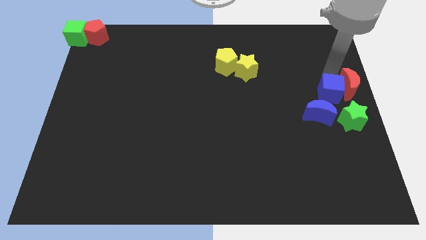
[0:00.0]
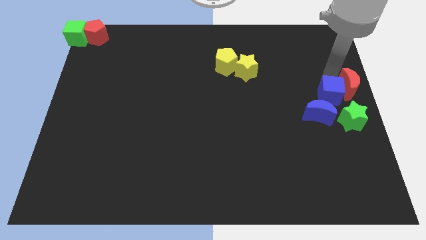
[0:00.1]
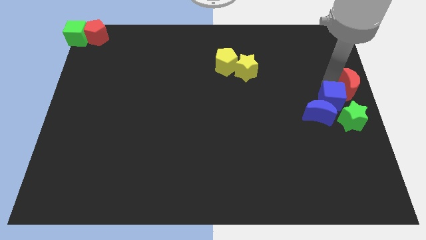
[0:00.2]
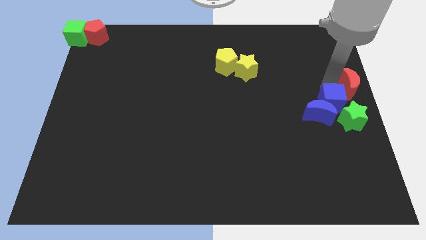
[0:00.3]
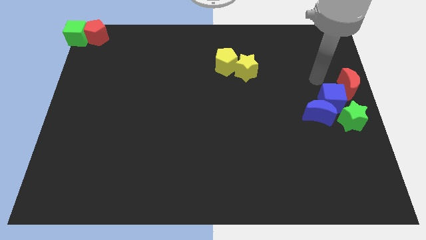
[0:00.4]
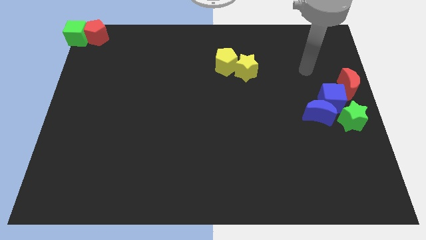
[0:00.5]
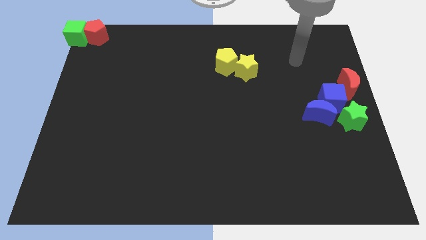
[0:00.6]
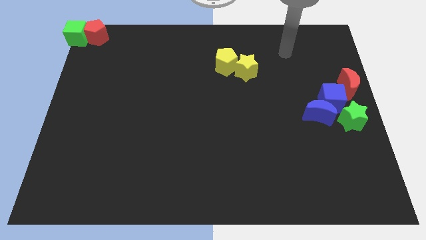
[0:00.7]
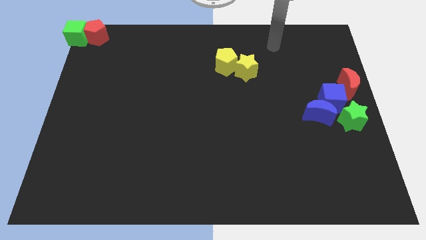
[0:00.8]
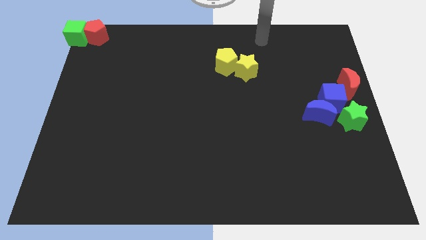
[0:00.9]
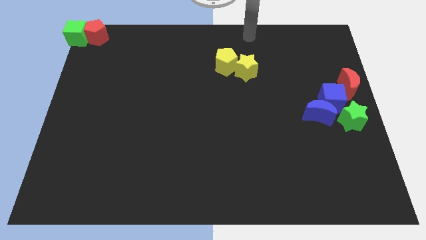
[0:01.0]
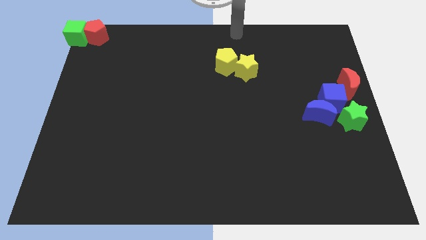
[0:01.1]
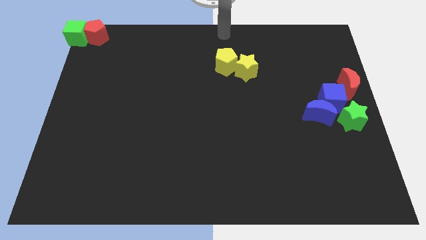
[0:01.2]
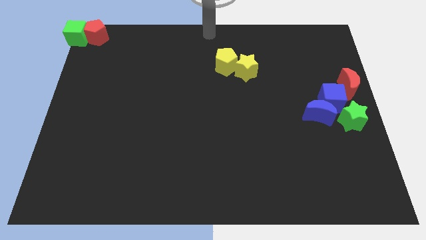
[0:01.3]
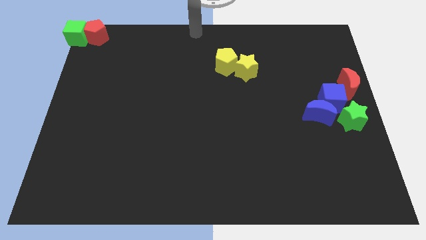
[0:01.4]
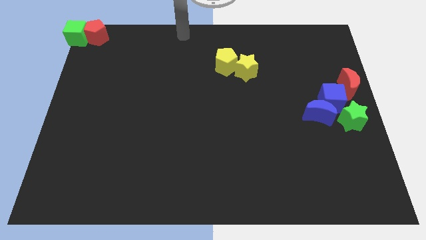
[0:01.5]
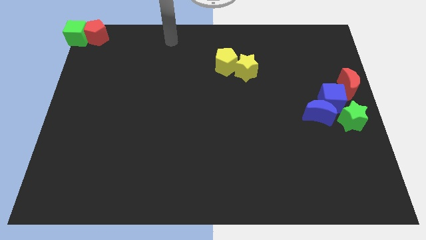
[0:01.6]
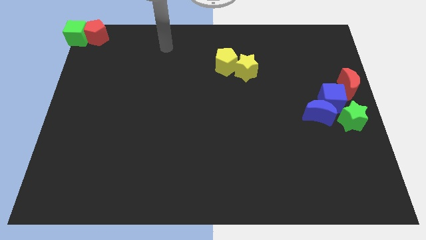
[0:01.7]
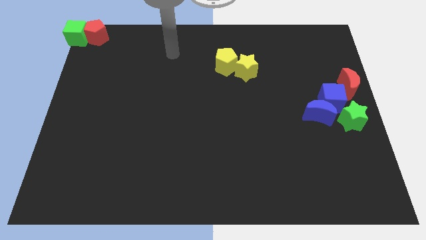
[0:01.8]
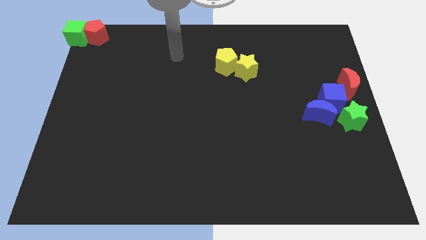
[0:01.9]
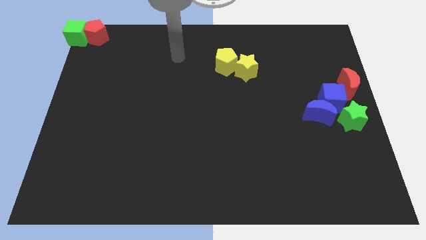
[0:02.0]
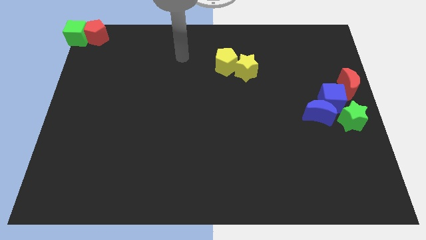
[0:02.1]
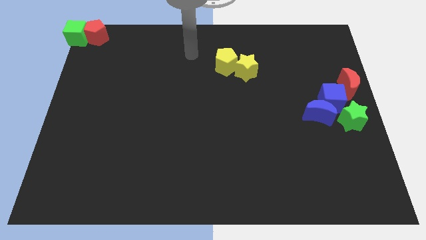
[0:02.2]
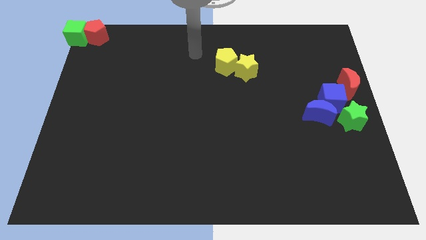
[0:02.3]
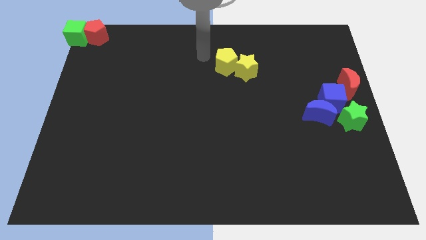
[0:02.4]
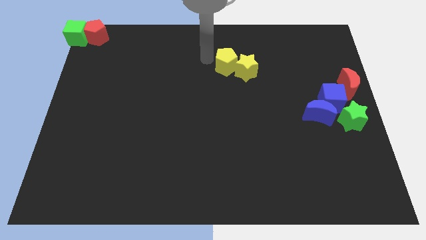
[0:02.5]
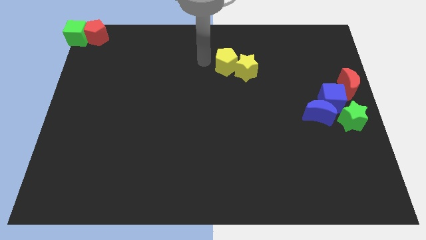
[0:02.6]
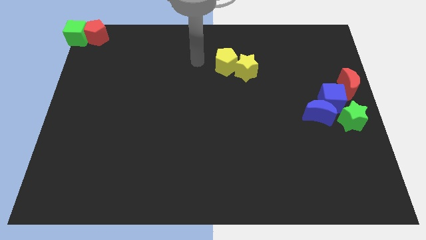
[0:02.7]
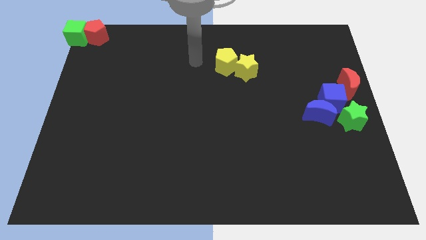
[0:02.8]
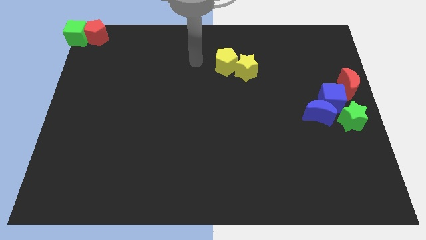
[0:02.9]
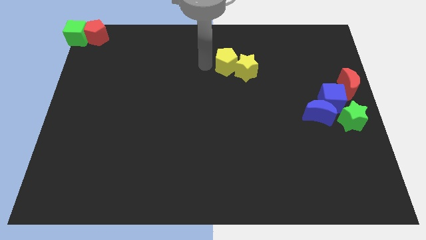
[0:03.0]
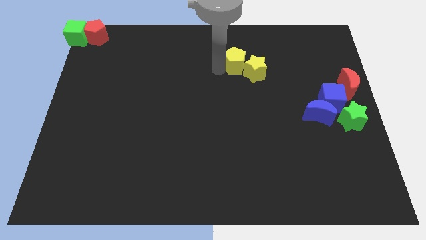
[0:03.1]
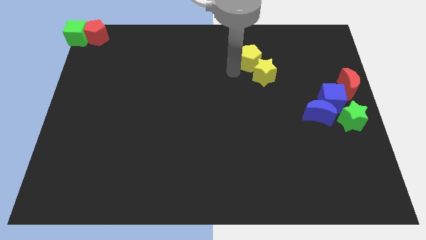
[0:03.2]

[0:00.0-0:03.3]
push the yellow star with the yellow pentagon towards the right center of the board

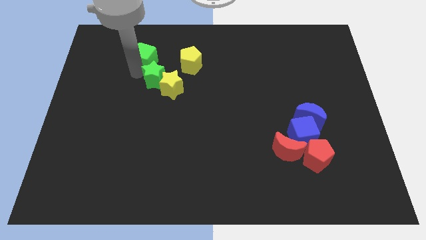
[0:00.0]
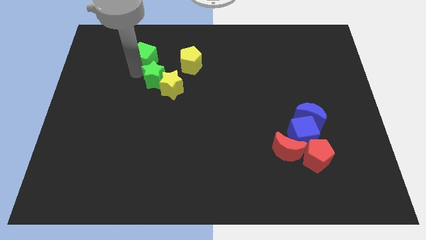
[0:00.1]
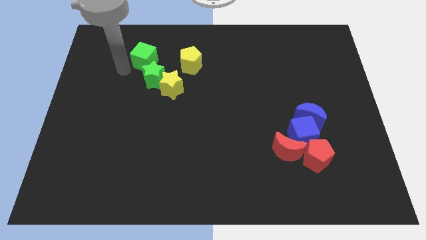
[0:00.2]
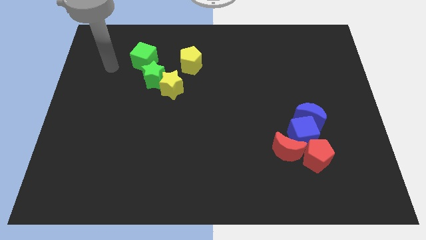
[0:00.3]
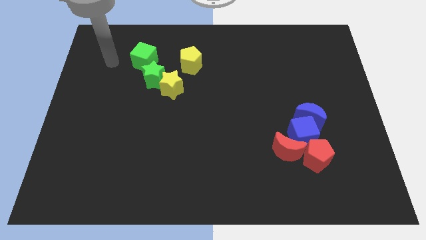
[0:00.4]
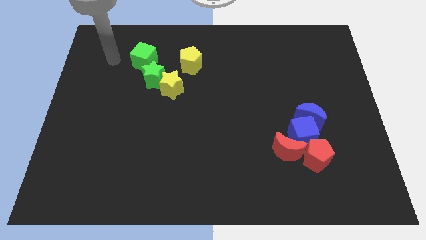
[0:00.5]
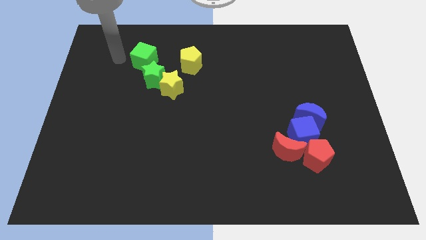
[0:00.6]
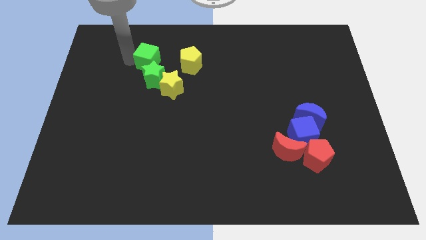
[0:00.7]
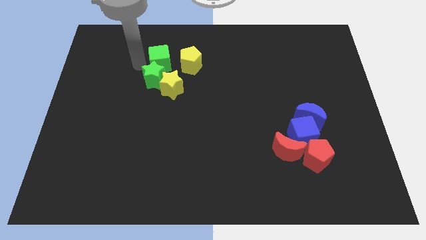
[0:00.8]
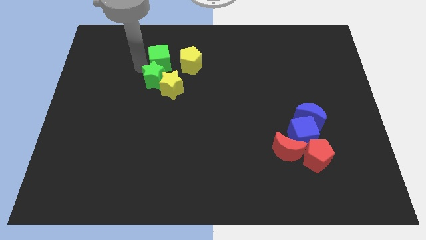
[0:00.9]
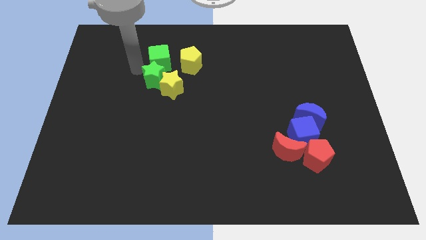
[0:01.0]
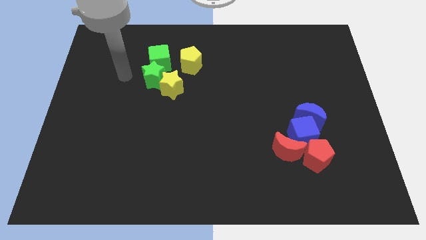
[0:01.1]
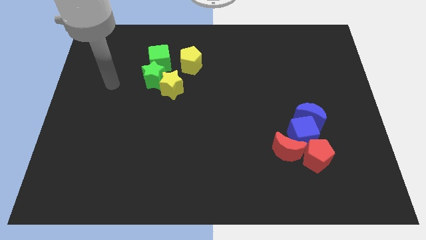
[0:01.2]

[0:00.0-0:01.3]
move the green cube to the top side of the green star

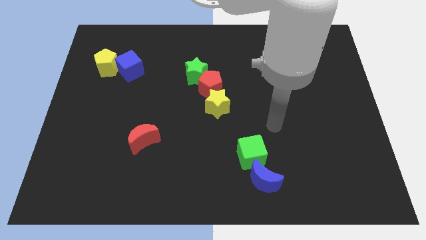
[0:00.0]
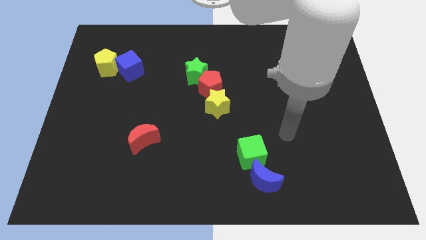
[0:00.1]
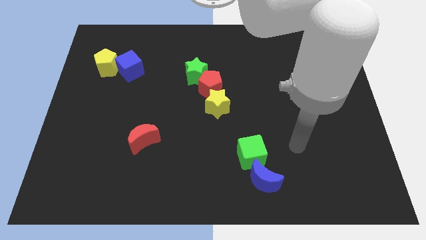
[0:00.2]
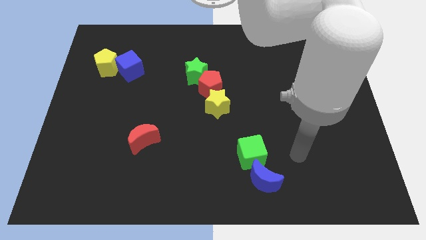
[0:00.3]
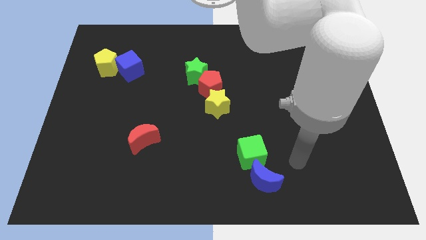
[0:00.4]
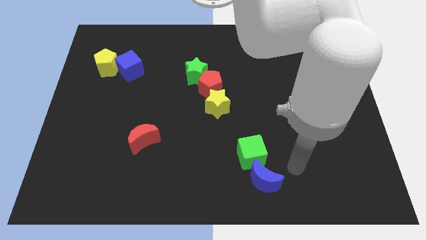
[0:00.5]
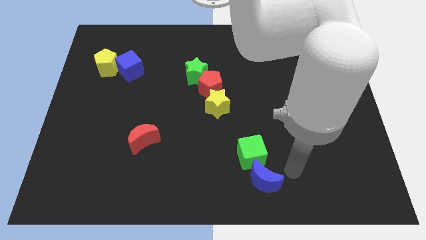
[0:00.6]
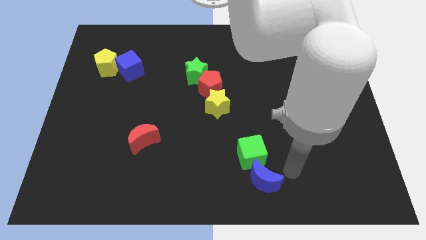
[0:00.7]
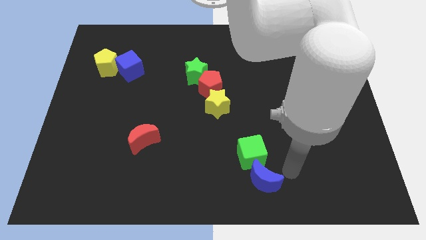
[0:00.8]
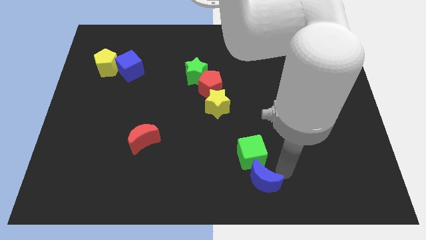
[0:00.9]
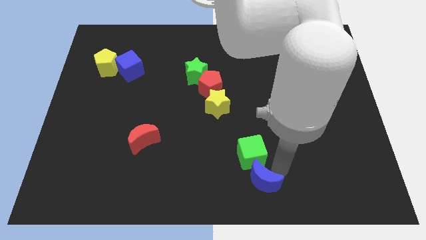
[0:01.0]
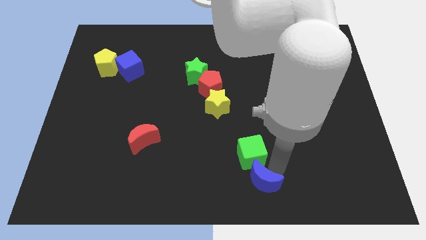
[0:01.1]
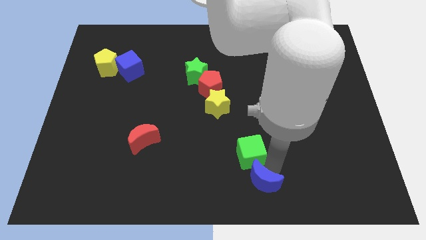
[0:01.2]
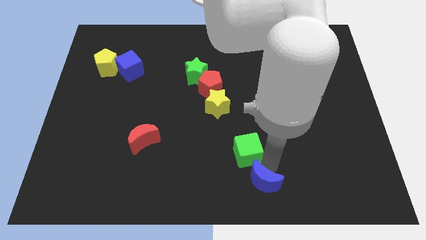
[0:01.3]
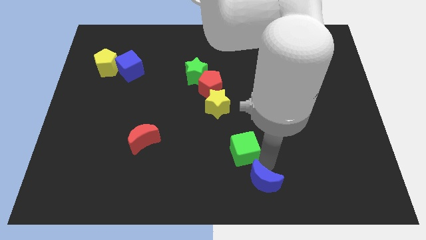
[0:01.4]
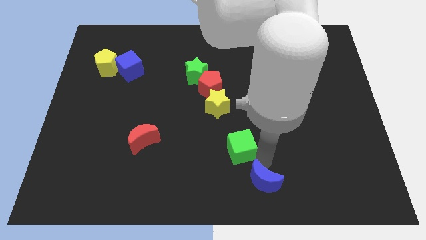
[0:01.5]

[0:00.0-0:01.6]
slightly push the green cube away from the blue crescent

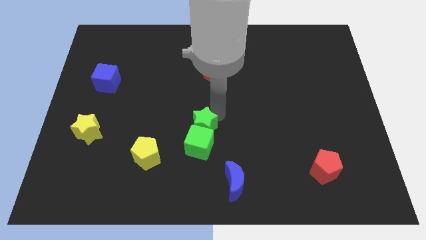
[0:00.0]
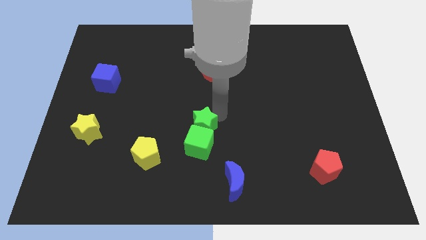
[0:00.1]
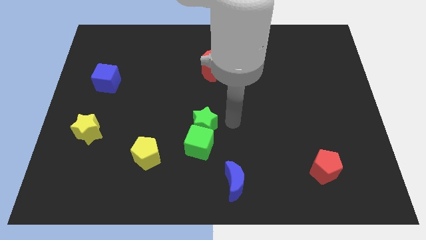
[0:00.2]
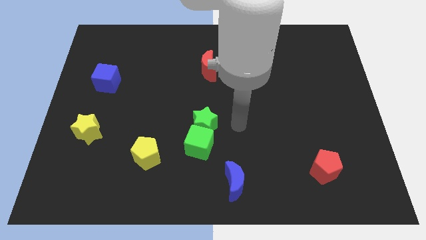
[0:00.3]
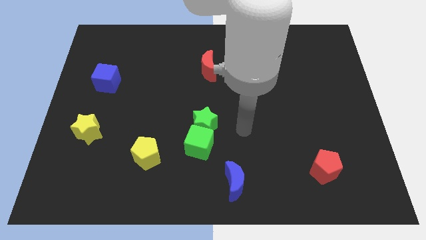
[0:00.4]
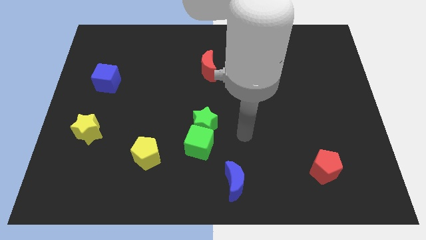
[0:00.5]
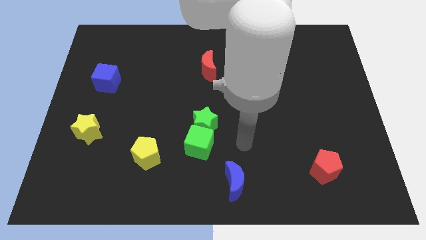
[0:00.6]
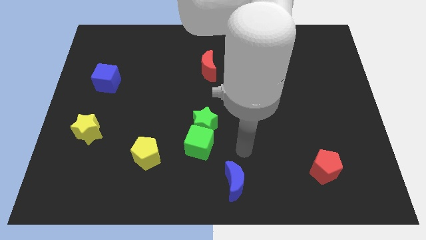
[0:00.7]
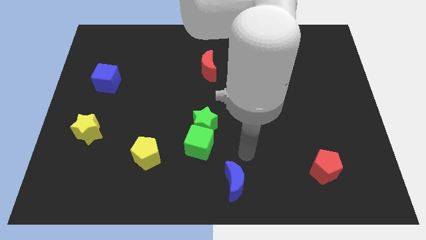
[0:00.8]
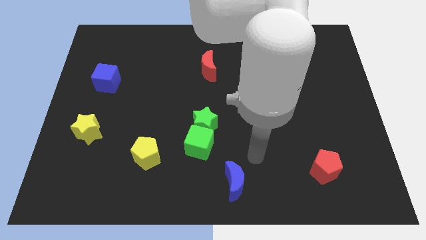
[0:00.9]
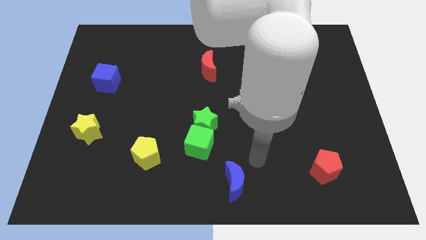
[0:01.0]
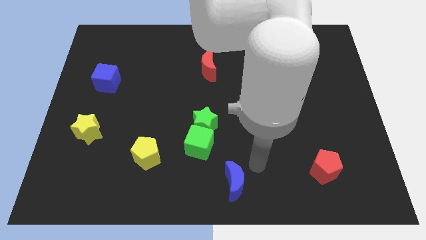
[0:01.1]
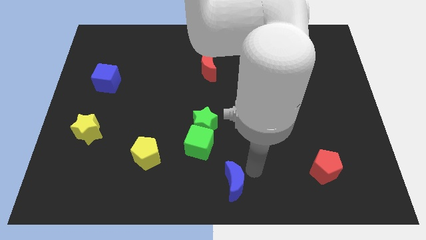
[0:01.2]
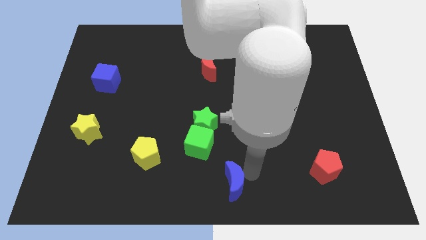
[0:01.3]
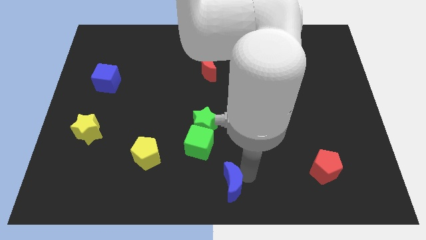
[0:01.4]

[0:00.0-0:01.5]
place your arm to the right of blue moon

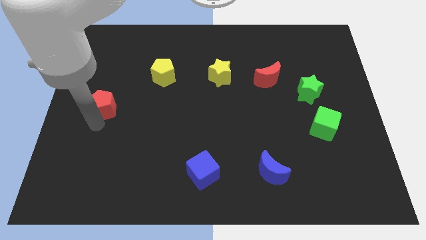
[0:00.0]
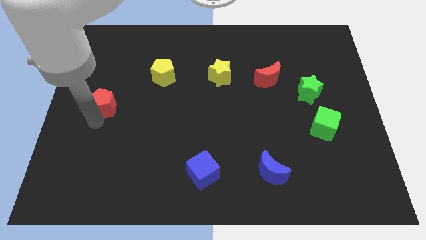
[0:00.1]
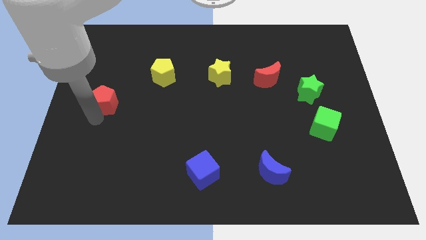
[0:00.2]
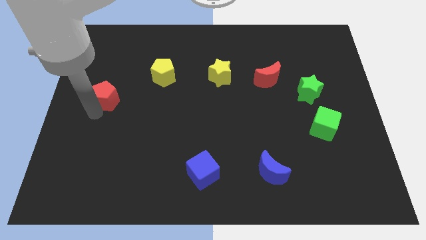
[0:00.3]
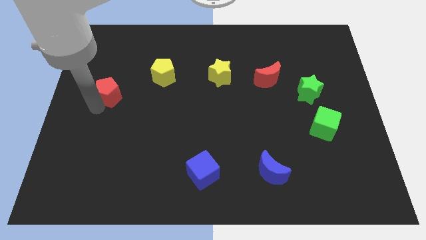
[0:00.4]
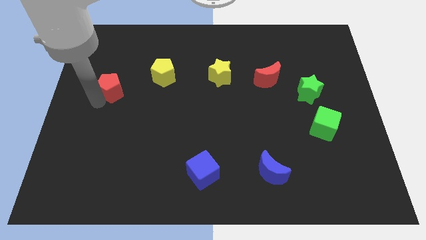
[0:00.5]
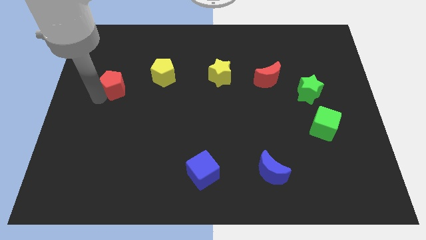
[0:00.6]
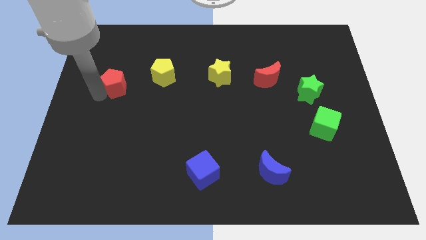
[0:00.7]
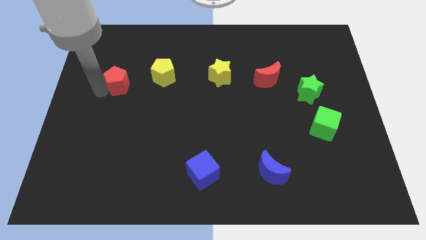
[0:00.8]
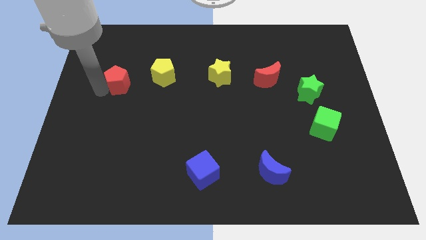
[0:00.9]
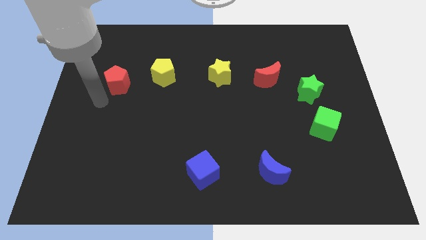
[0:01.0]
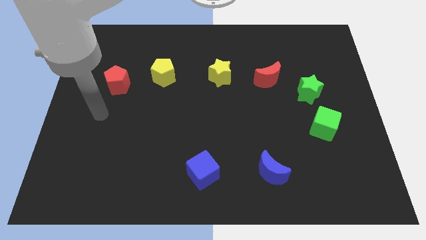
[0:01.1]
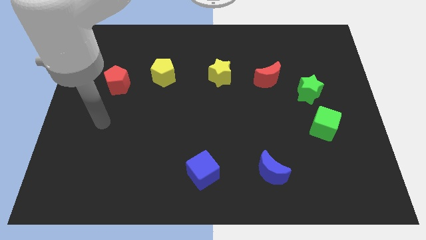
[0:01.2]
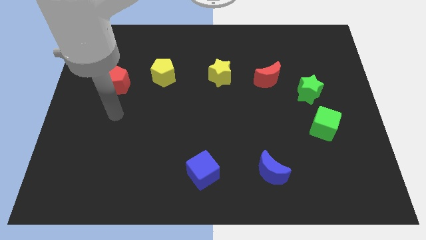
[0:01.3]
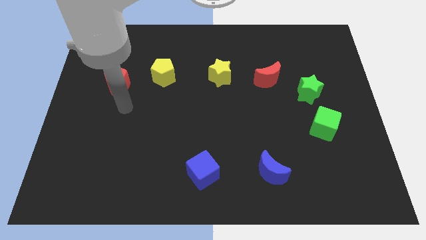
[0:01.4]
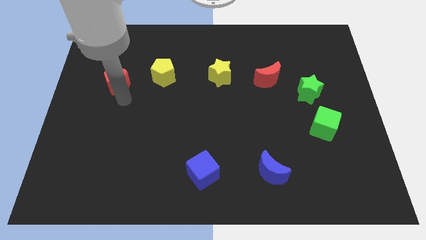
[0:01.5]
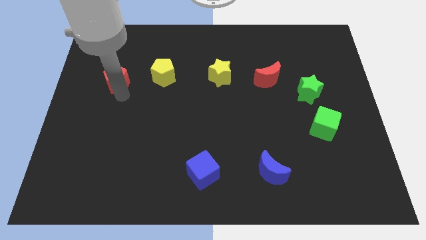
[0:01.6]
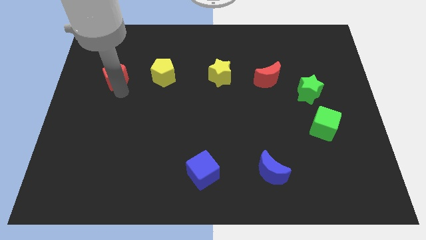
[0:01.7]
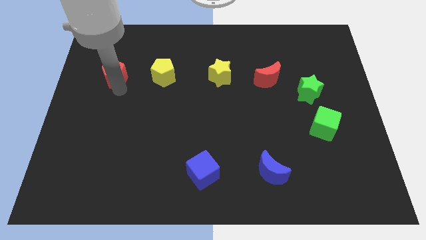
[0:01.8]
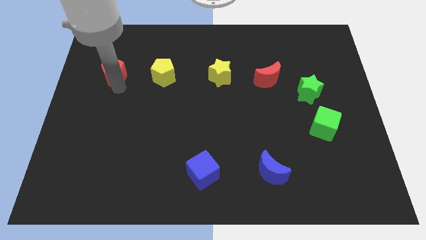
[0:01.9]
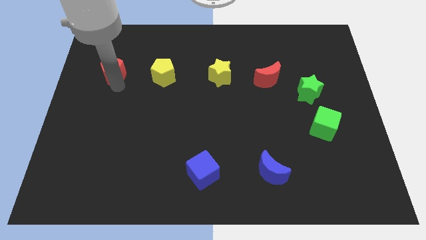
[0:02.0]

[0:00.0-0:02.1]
put the red pentagon to the left of yellow pentagon to form a horizontal line of blocks